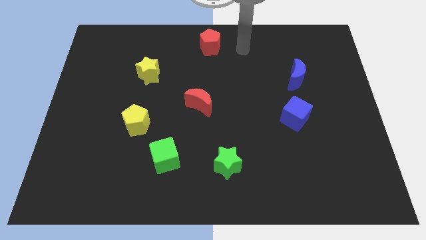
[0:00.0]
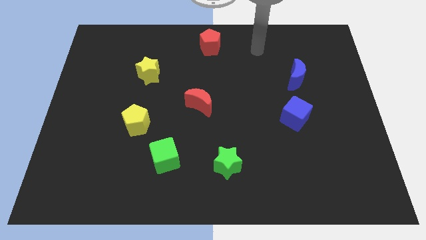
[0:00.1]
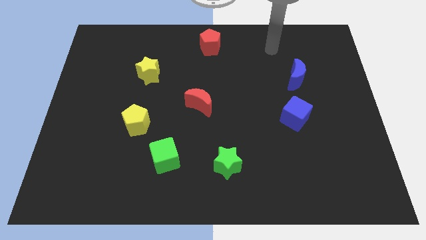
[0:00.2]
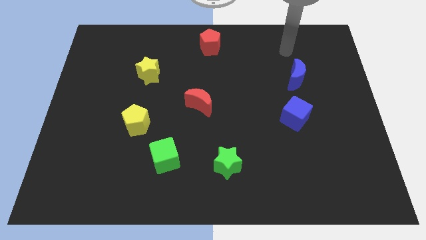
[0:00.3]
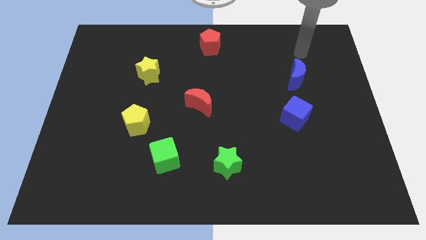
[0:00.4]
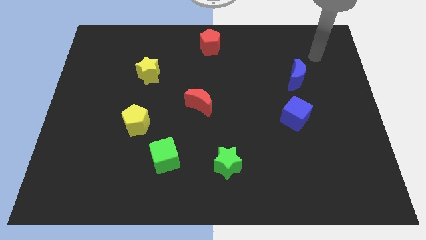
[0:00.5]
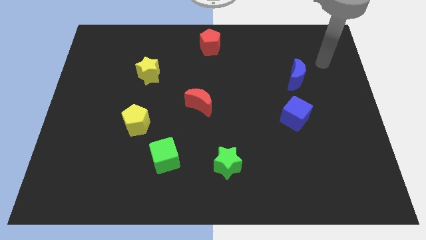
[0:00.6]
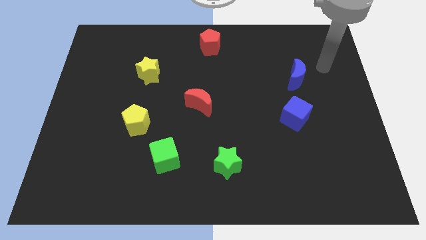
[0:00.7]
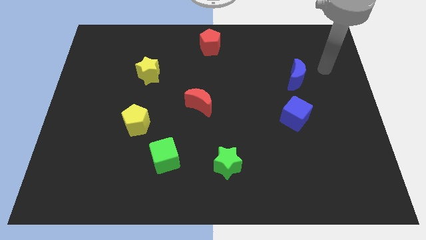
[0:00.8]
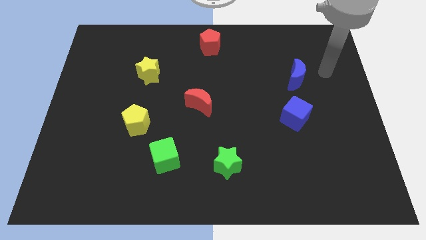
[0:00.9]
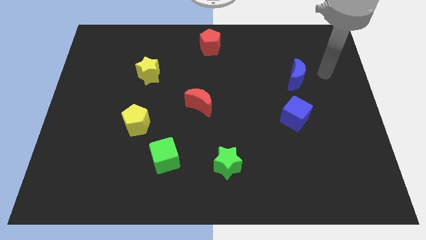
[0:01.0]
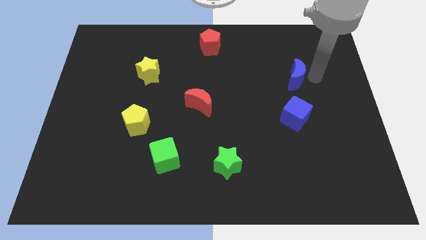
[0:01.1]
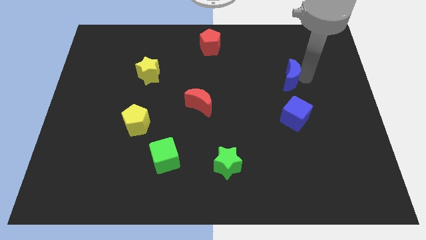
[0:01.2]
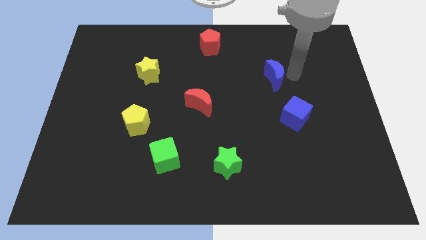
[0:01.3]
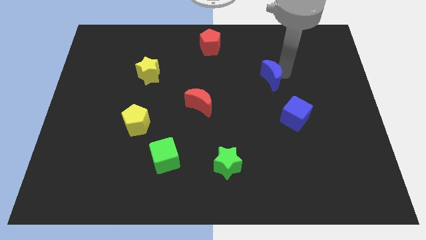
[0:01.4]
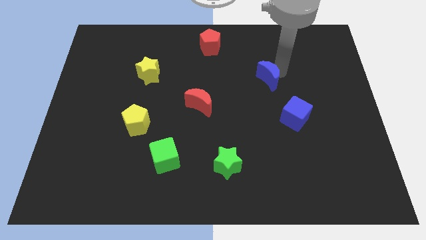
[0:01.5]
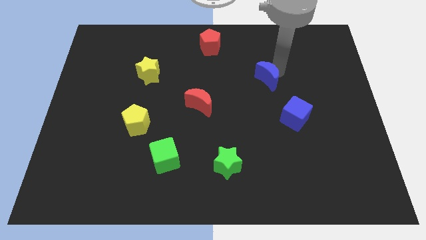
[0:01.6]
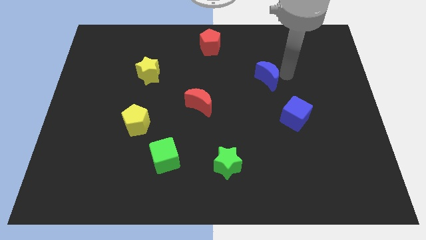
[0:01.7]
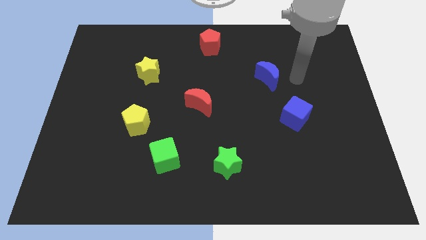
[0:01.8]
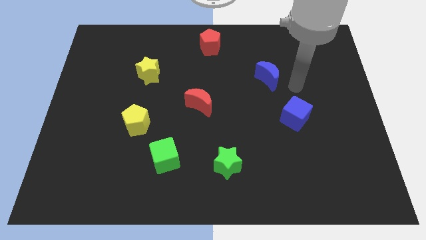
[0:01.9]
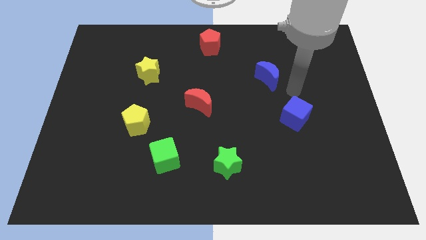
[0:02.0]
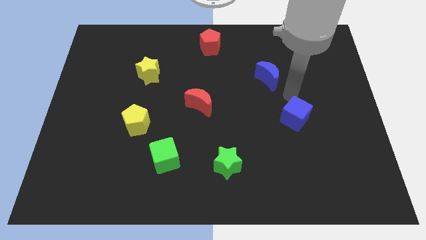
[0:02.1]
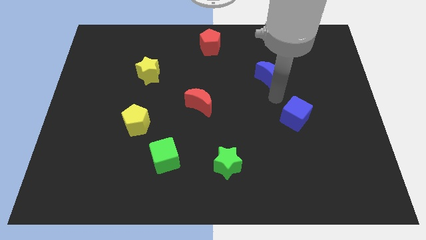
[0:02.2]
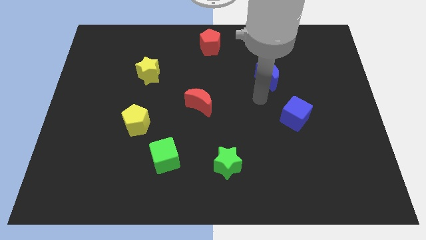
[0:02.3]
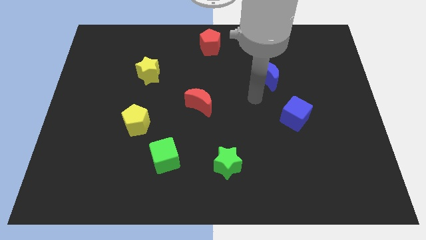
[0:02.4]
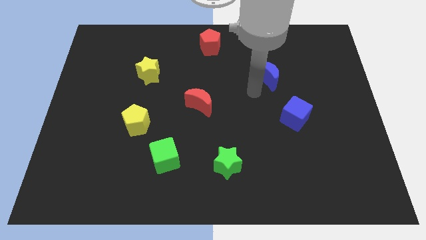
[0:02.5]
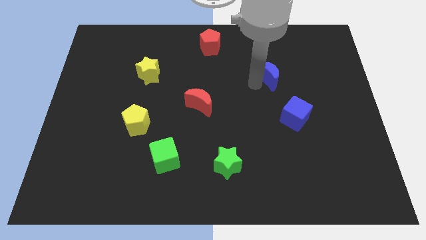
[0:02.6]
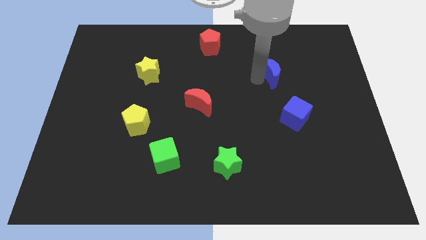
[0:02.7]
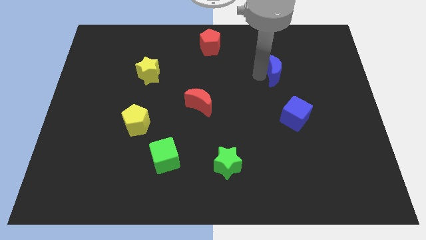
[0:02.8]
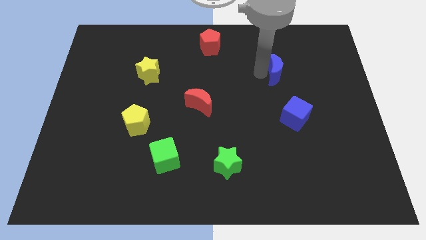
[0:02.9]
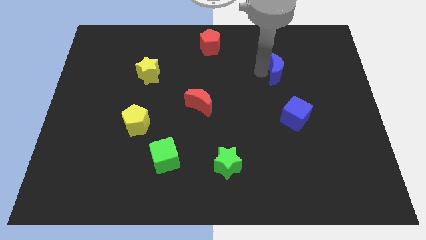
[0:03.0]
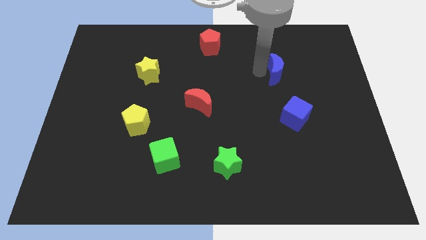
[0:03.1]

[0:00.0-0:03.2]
move the blue moon away from the top side of the blue cube

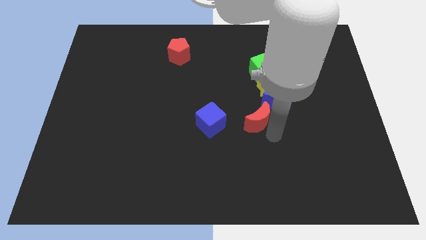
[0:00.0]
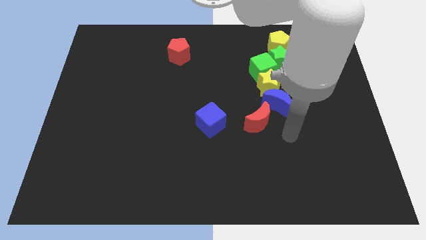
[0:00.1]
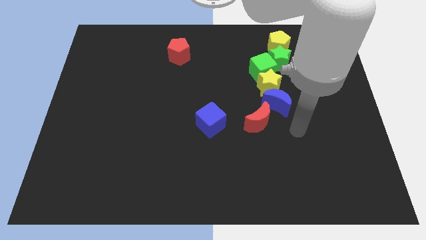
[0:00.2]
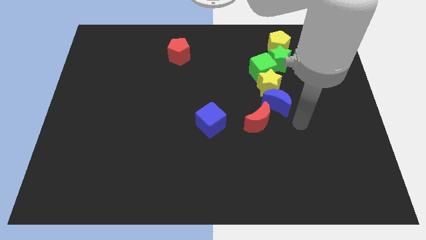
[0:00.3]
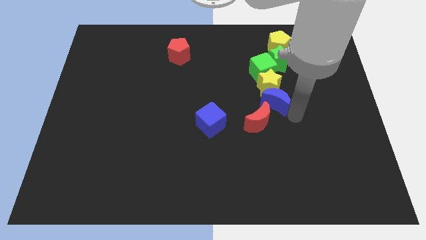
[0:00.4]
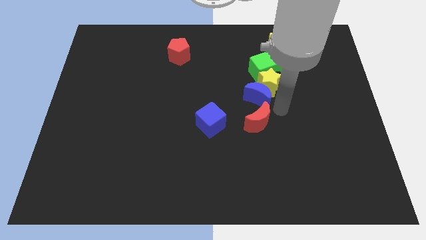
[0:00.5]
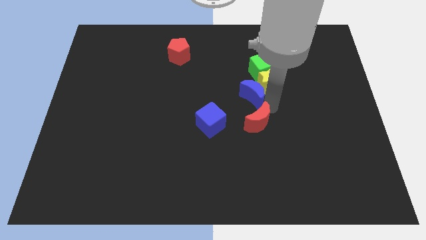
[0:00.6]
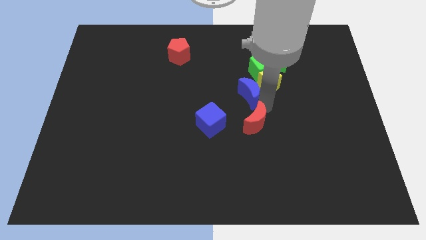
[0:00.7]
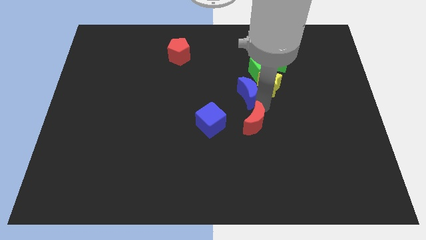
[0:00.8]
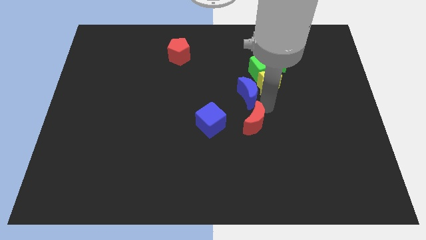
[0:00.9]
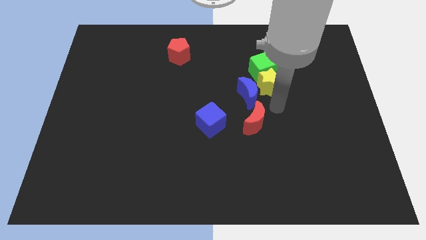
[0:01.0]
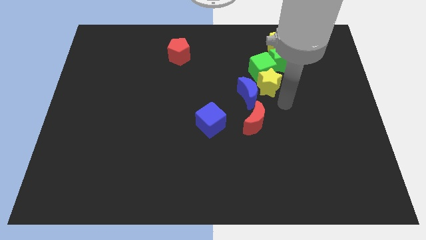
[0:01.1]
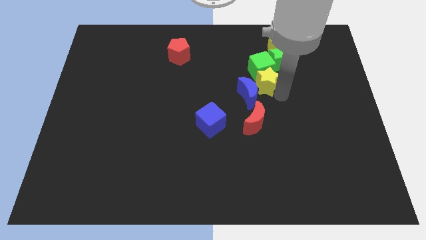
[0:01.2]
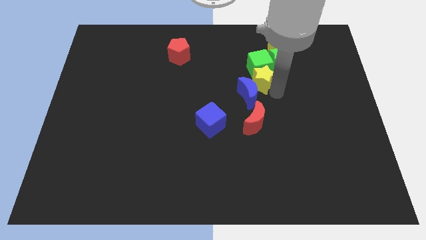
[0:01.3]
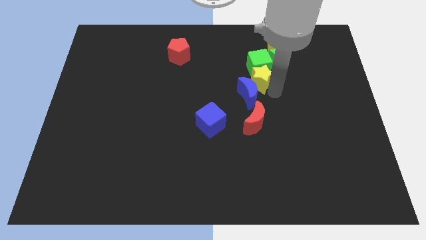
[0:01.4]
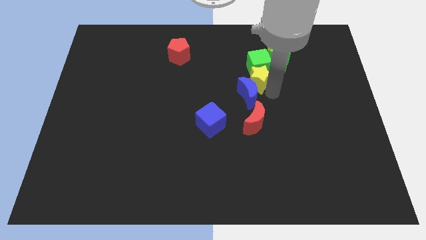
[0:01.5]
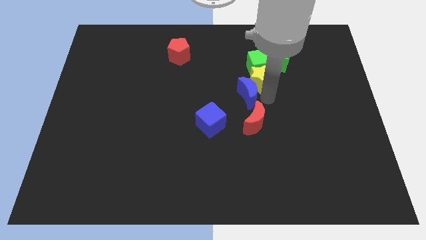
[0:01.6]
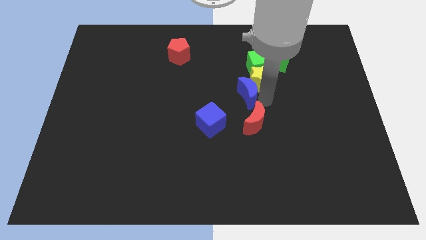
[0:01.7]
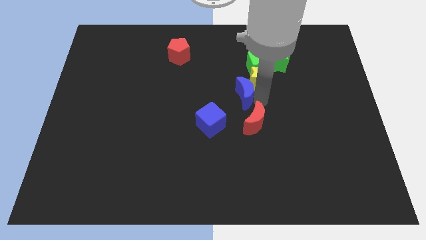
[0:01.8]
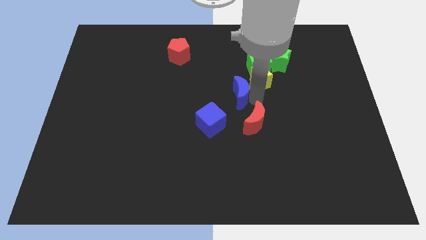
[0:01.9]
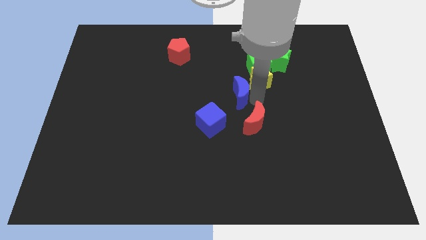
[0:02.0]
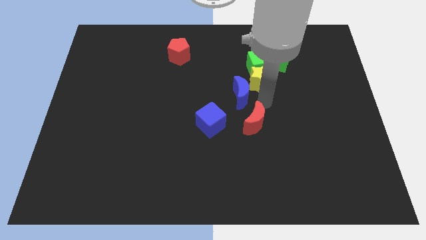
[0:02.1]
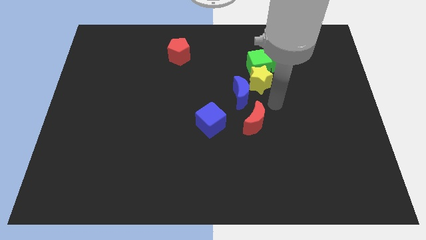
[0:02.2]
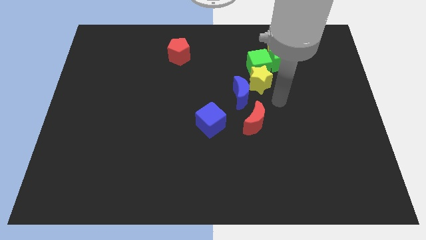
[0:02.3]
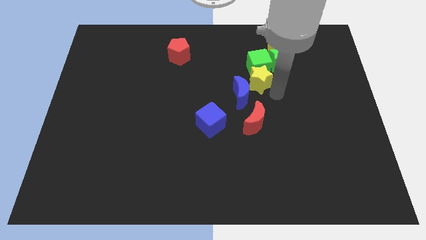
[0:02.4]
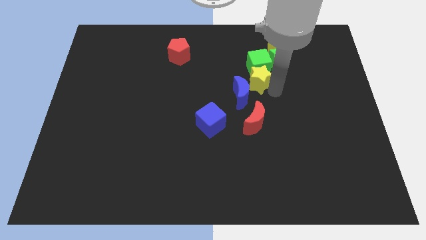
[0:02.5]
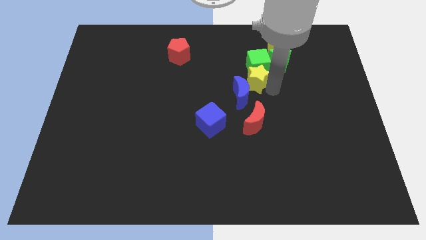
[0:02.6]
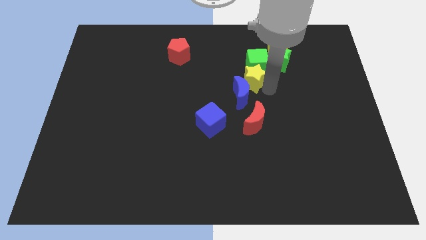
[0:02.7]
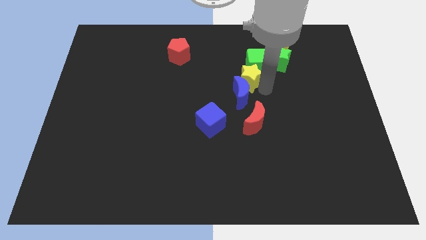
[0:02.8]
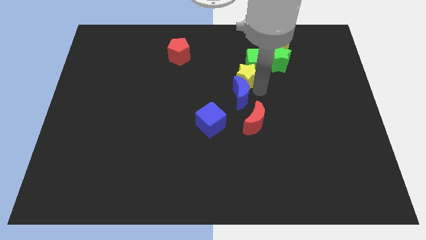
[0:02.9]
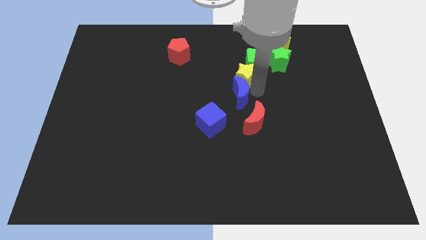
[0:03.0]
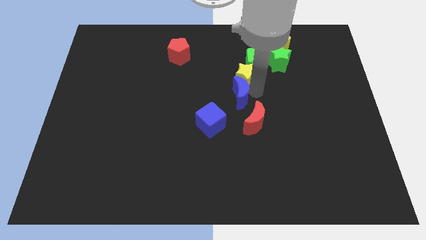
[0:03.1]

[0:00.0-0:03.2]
slightly move the blue crescent to the center of the board

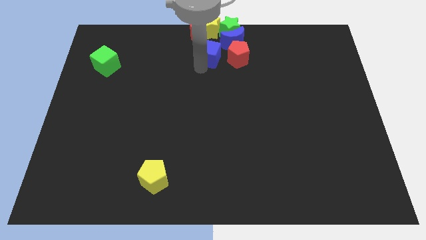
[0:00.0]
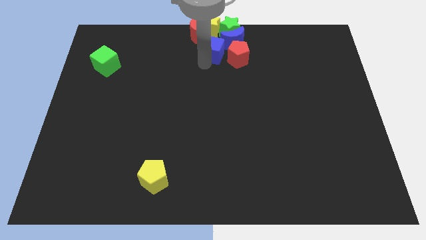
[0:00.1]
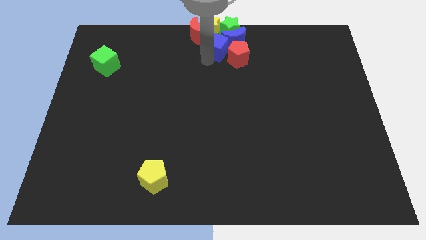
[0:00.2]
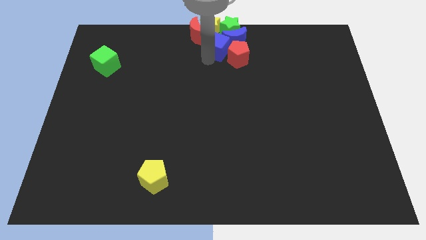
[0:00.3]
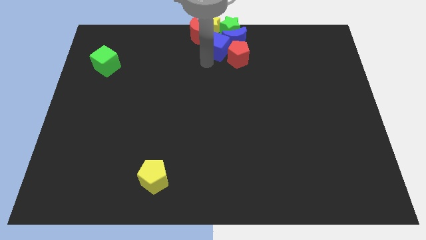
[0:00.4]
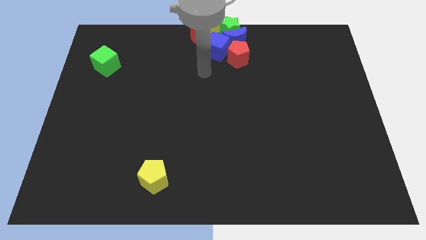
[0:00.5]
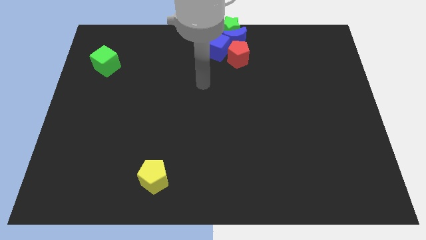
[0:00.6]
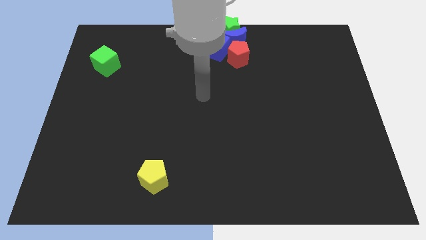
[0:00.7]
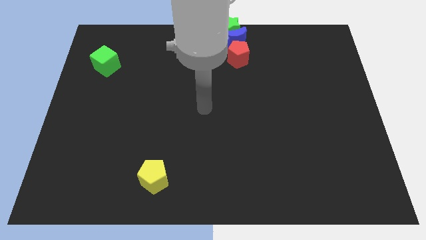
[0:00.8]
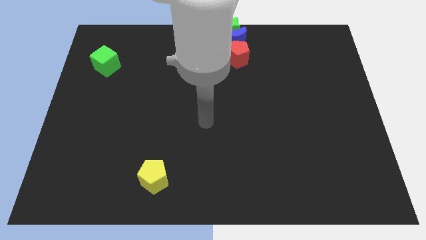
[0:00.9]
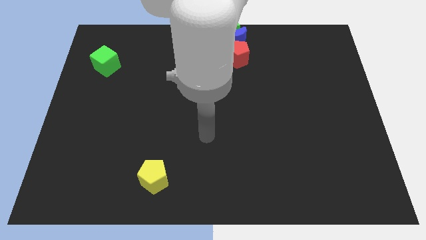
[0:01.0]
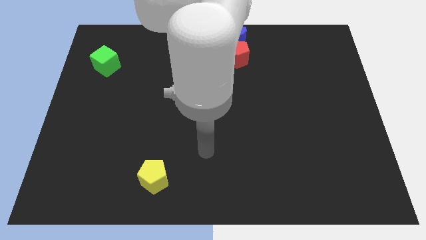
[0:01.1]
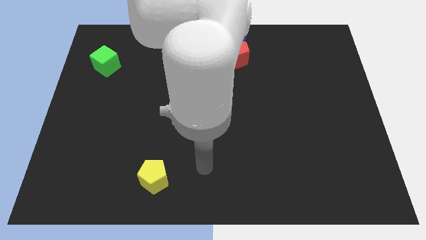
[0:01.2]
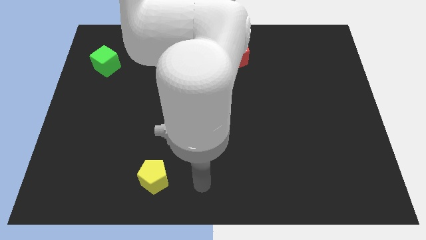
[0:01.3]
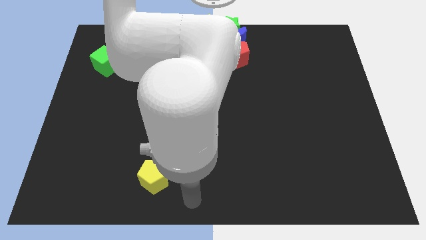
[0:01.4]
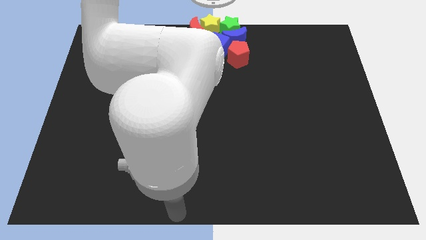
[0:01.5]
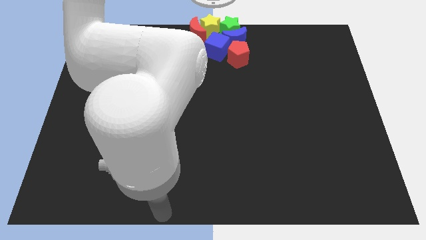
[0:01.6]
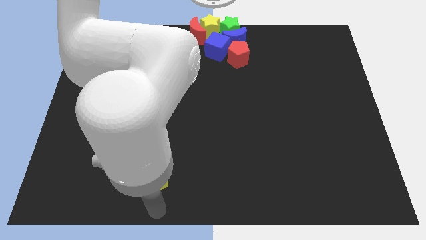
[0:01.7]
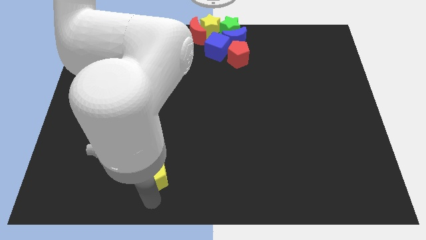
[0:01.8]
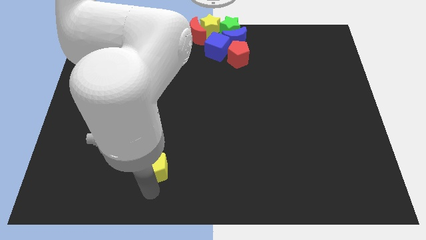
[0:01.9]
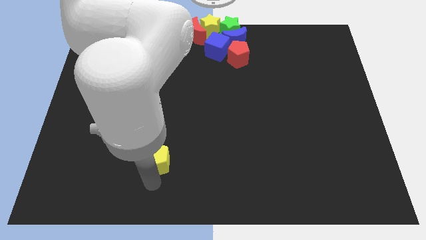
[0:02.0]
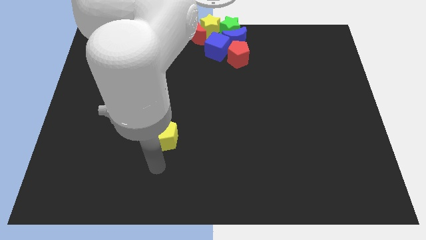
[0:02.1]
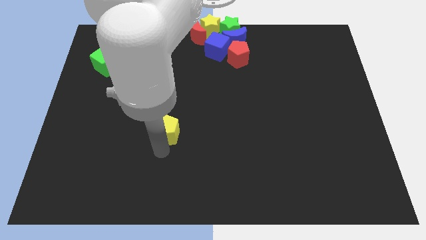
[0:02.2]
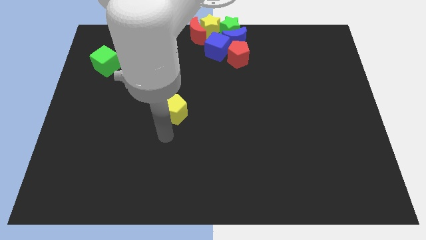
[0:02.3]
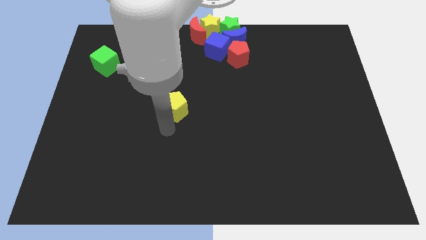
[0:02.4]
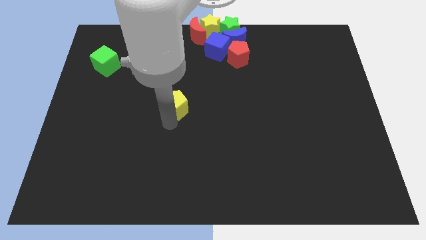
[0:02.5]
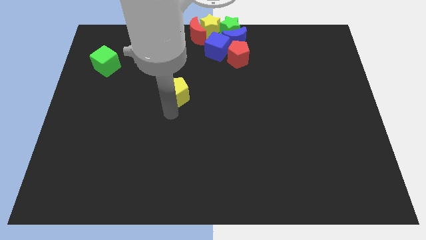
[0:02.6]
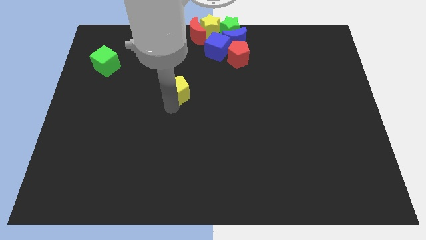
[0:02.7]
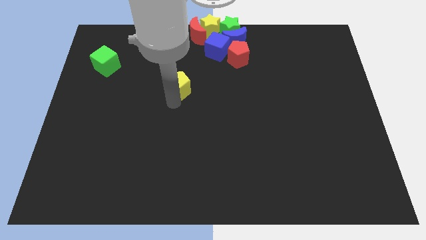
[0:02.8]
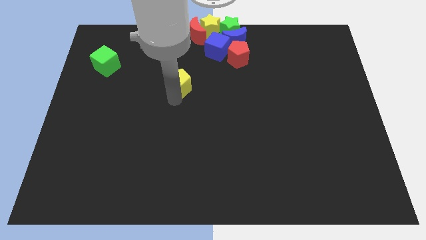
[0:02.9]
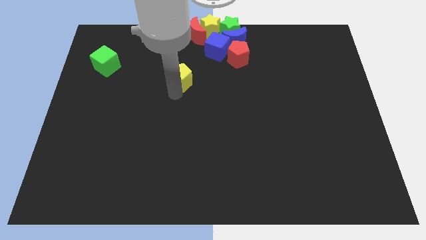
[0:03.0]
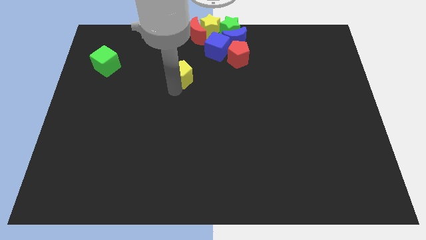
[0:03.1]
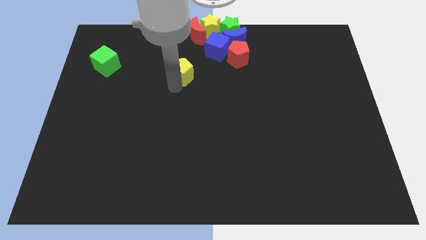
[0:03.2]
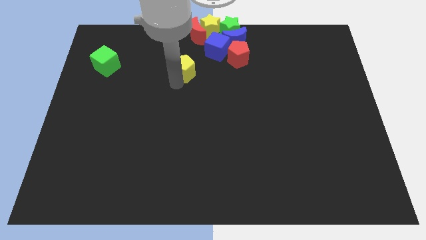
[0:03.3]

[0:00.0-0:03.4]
place the yellow pentagon horizontally to the right side of the green cube
